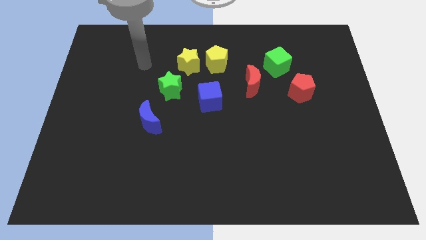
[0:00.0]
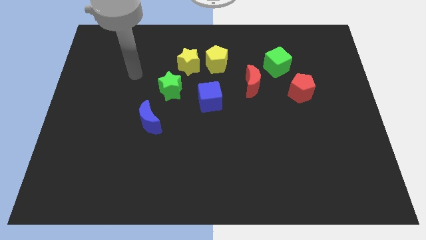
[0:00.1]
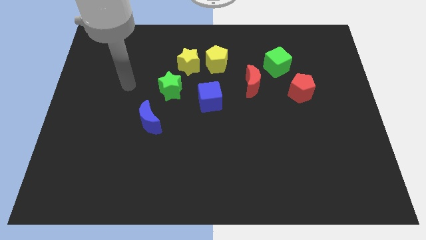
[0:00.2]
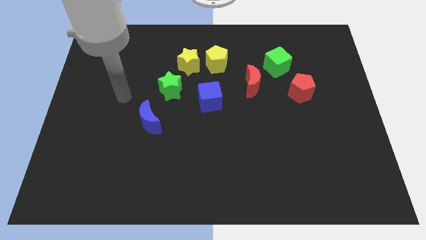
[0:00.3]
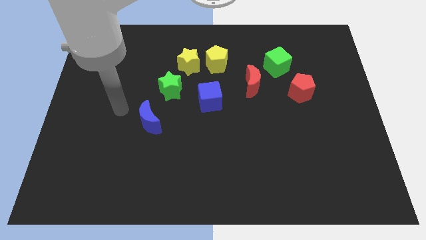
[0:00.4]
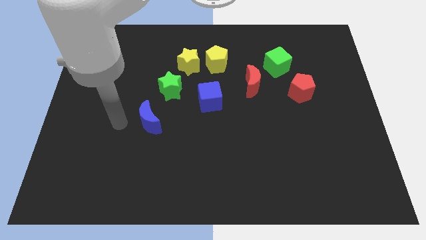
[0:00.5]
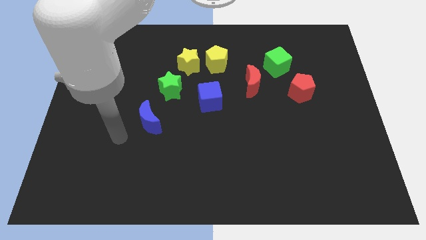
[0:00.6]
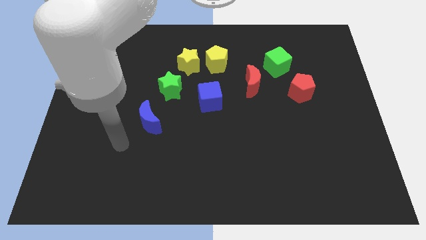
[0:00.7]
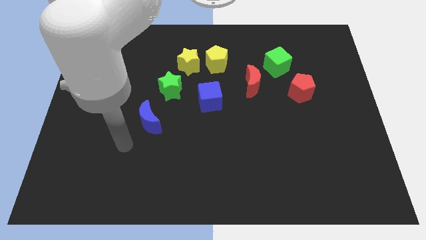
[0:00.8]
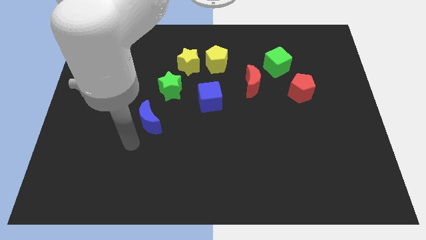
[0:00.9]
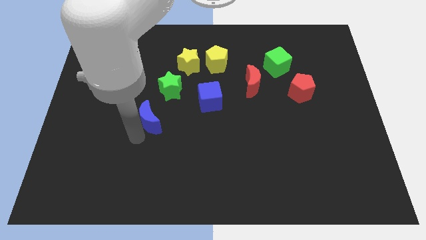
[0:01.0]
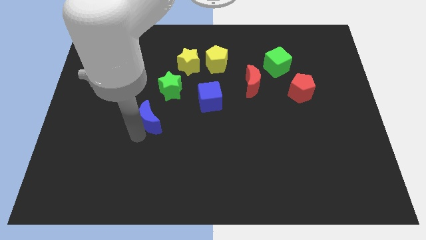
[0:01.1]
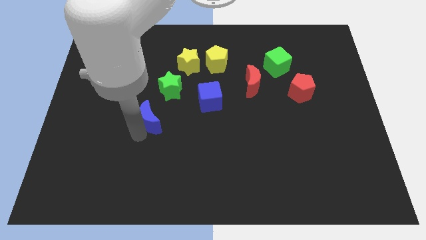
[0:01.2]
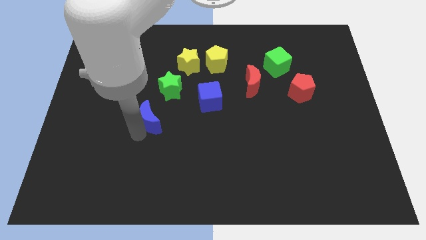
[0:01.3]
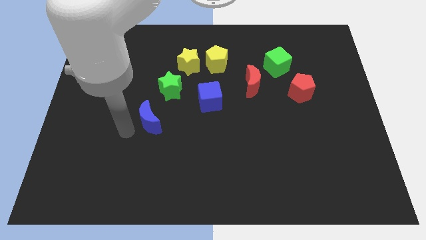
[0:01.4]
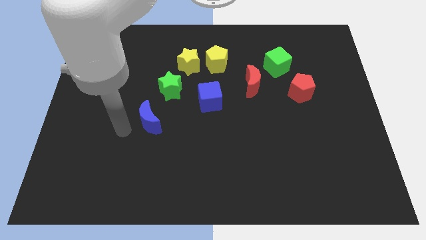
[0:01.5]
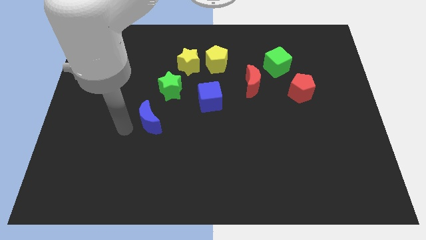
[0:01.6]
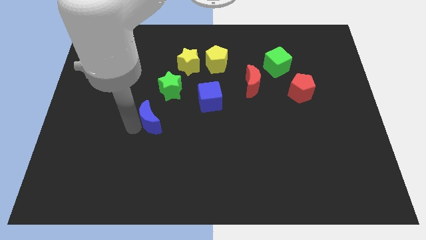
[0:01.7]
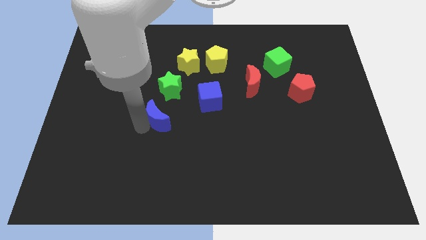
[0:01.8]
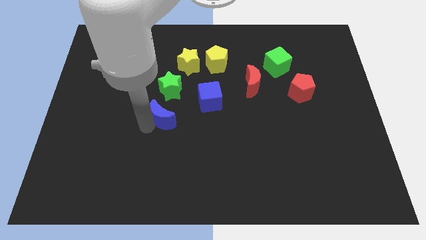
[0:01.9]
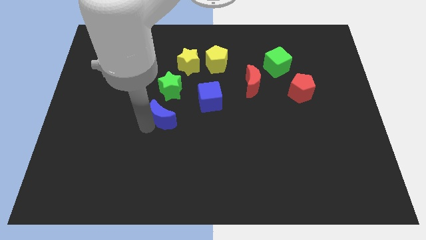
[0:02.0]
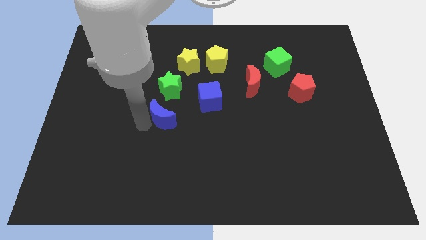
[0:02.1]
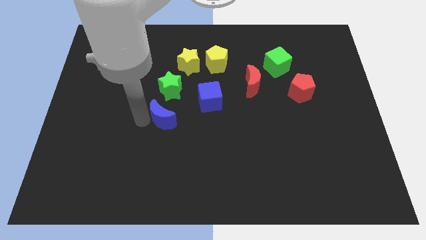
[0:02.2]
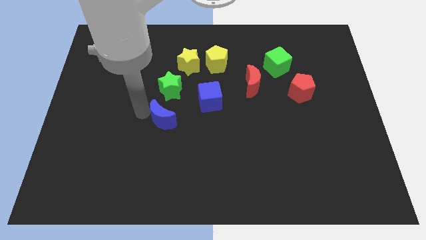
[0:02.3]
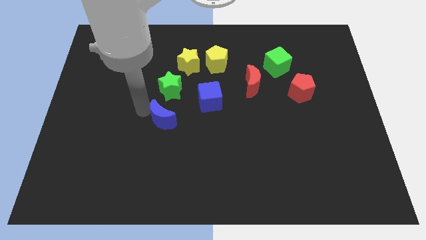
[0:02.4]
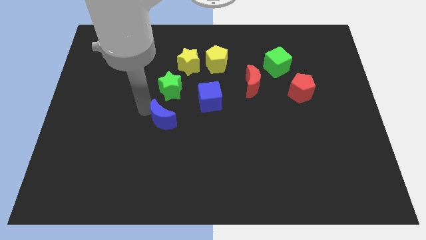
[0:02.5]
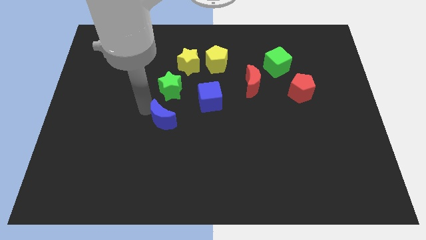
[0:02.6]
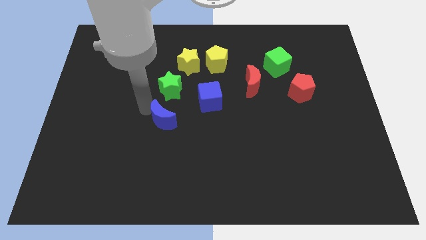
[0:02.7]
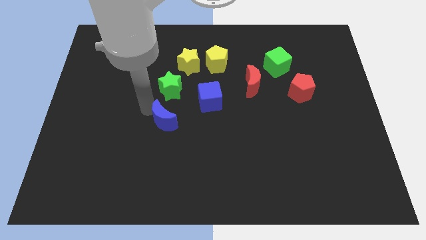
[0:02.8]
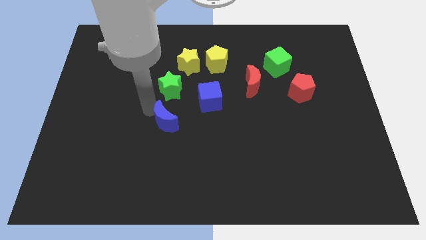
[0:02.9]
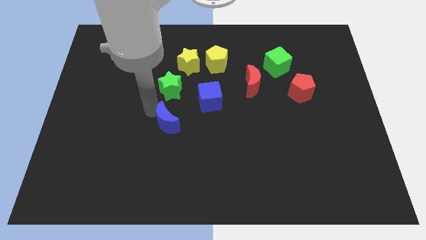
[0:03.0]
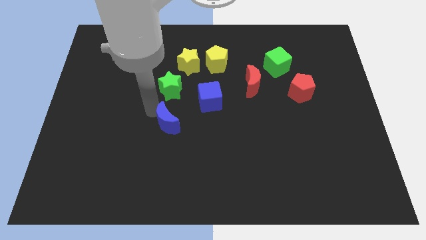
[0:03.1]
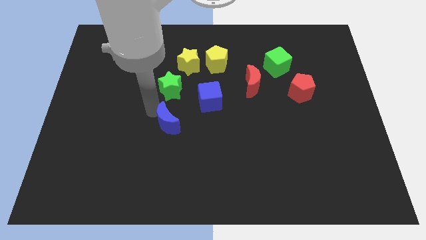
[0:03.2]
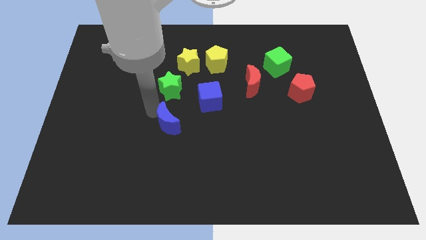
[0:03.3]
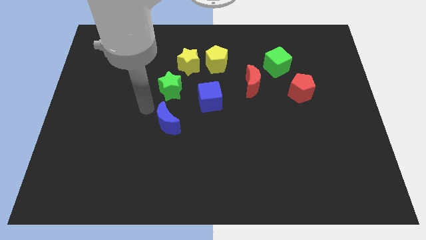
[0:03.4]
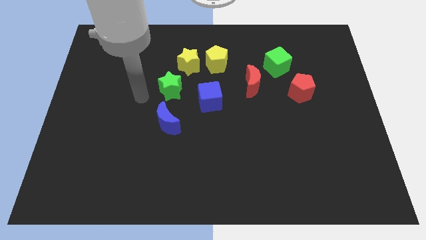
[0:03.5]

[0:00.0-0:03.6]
move the blue crescent to the bottom of the green star

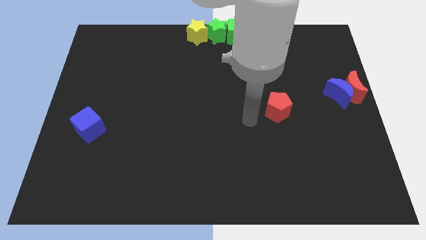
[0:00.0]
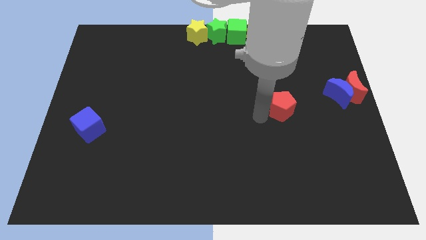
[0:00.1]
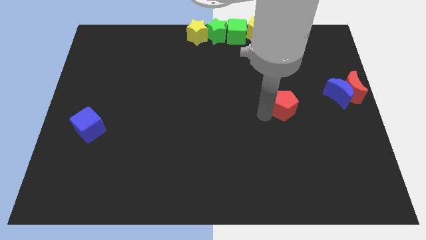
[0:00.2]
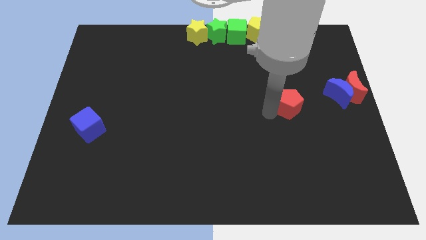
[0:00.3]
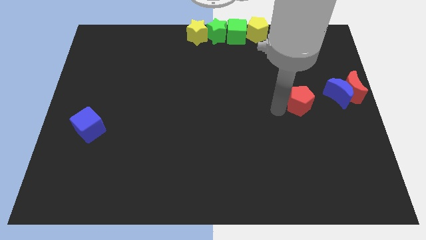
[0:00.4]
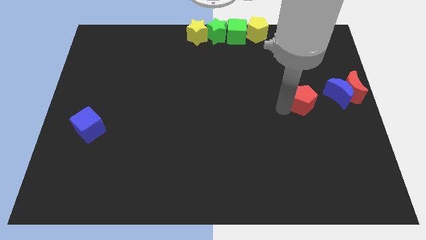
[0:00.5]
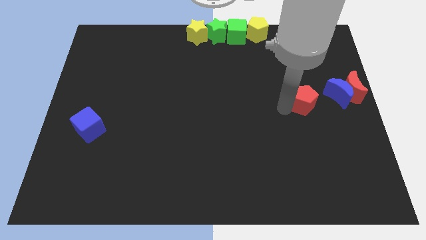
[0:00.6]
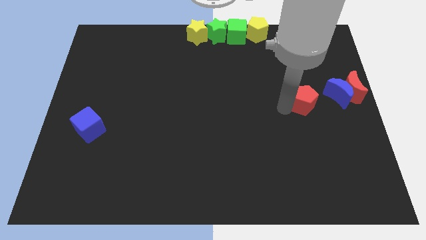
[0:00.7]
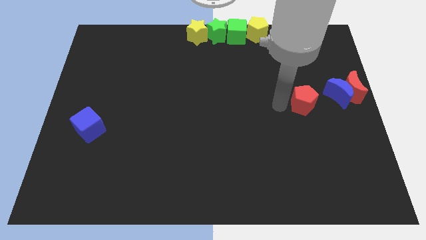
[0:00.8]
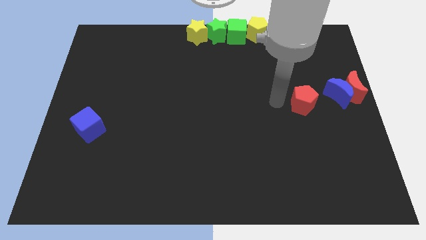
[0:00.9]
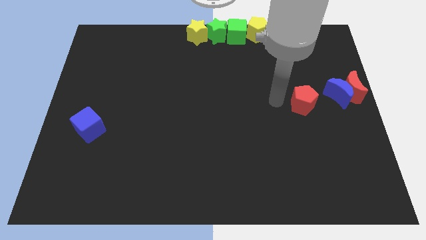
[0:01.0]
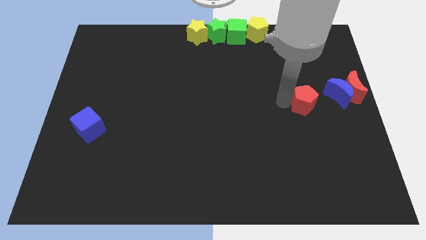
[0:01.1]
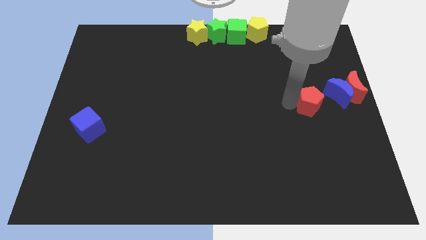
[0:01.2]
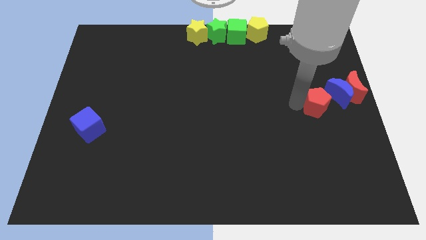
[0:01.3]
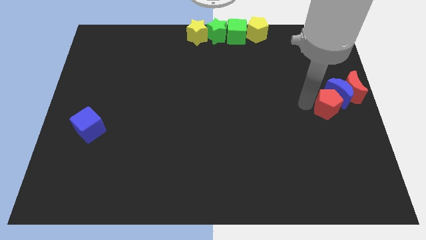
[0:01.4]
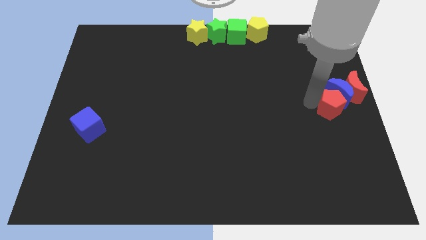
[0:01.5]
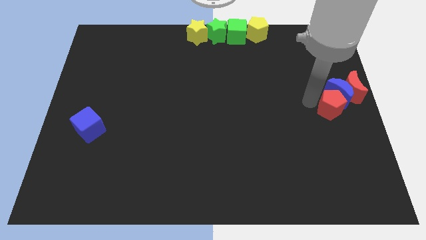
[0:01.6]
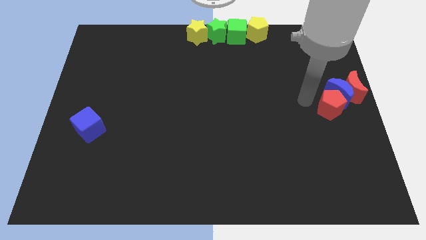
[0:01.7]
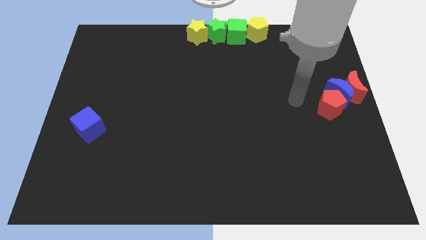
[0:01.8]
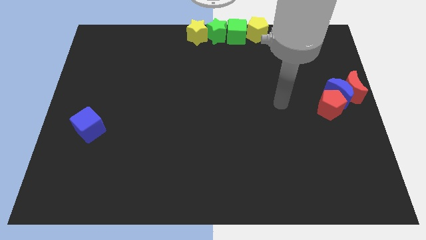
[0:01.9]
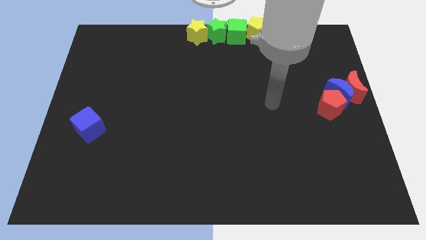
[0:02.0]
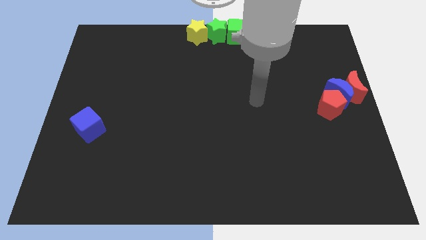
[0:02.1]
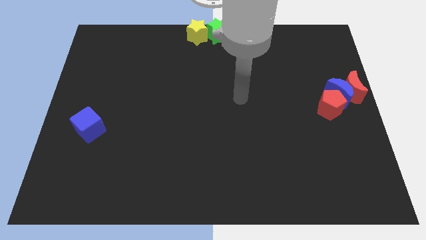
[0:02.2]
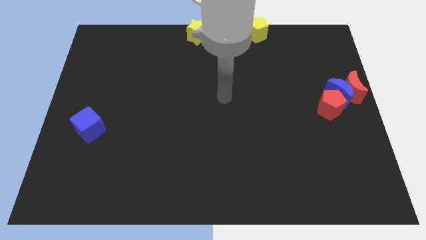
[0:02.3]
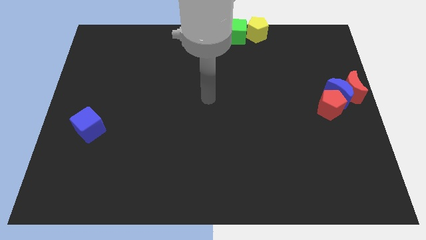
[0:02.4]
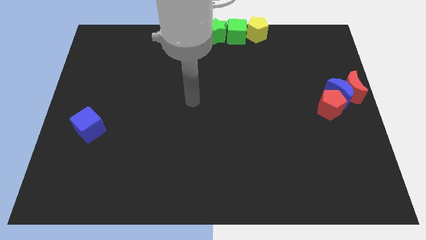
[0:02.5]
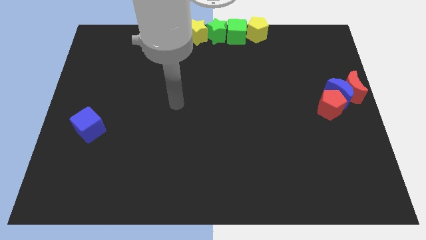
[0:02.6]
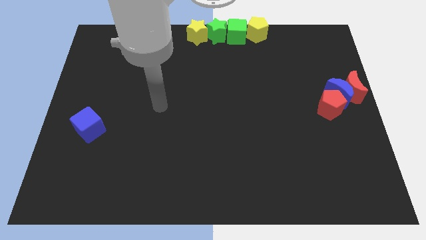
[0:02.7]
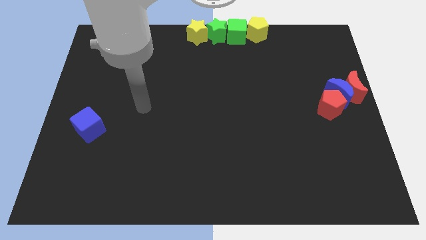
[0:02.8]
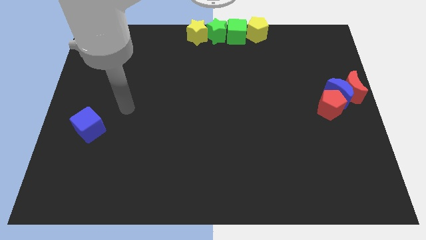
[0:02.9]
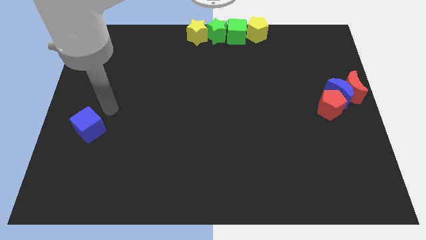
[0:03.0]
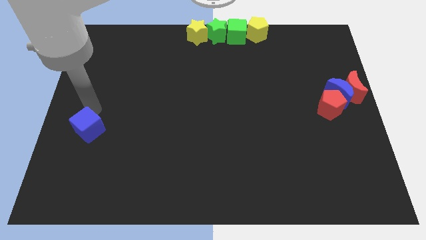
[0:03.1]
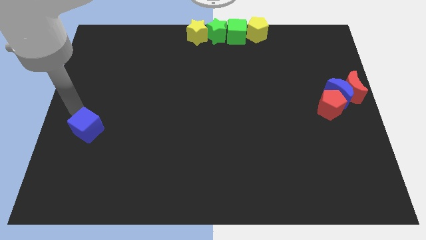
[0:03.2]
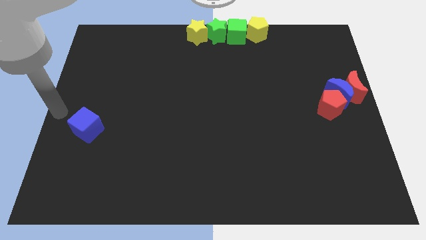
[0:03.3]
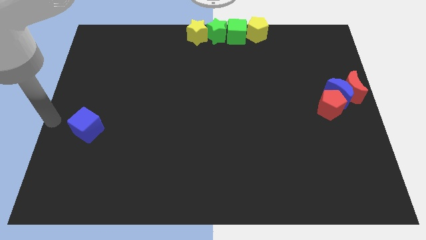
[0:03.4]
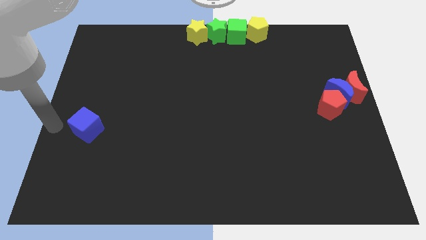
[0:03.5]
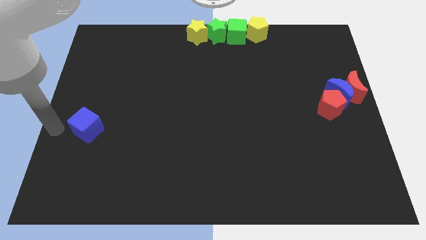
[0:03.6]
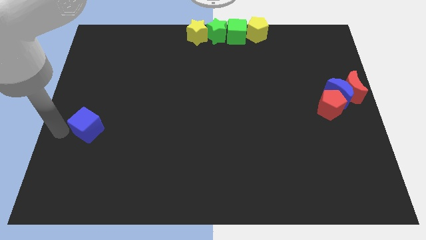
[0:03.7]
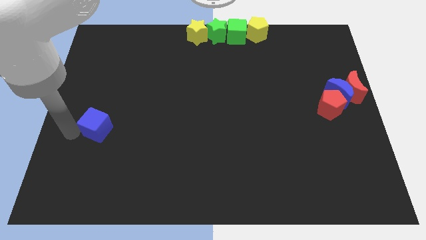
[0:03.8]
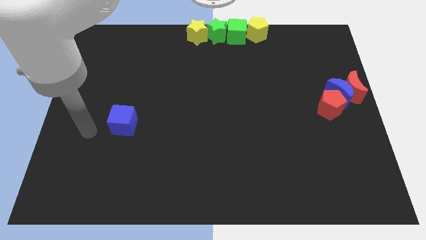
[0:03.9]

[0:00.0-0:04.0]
move your arm towards the blue cube

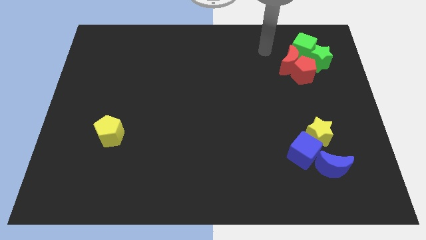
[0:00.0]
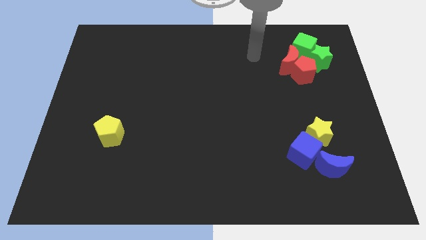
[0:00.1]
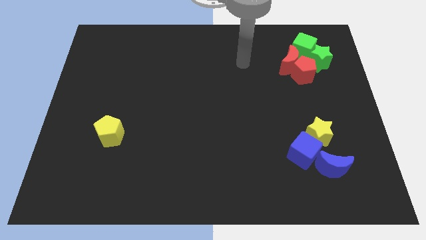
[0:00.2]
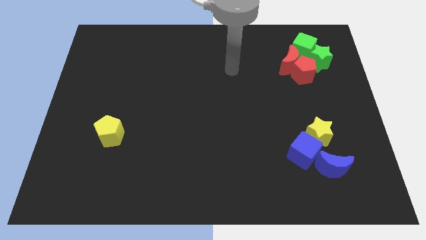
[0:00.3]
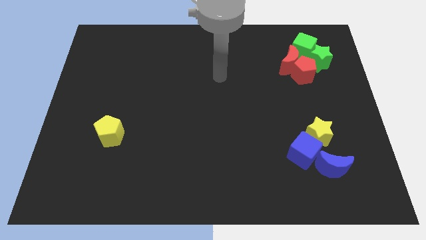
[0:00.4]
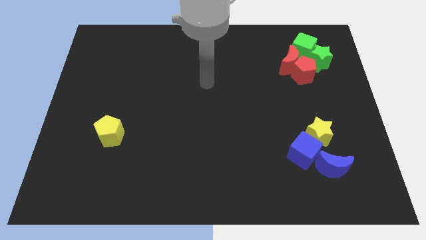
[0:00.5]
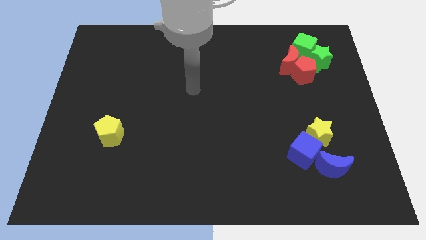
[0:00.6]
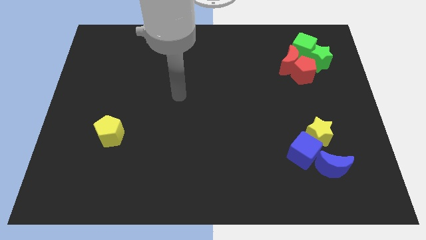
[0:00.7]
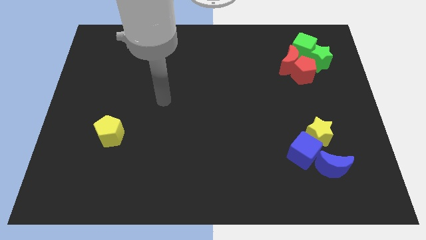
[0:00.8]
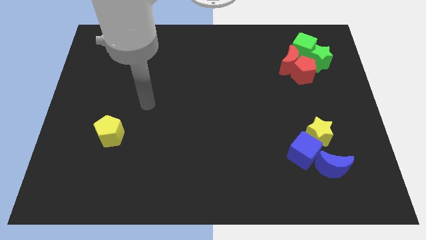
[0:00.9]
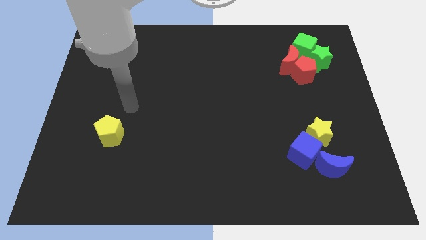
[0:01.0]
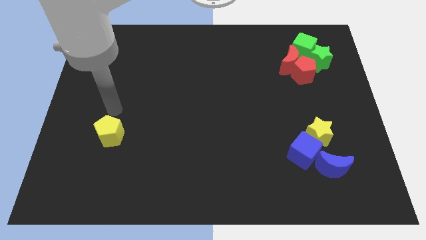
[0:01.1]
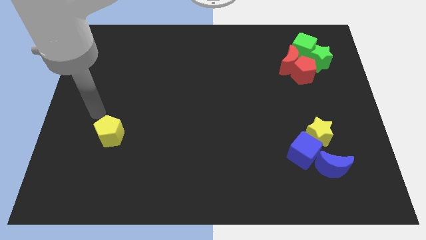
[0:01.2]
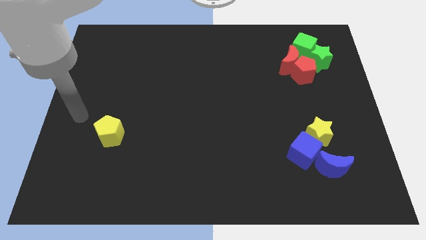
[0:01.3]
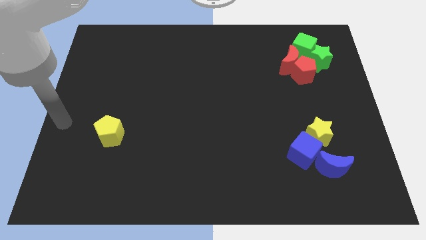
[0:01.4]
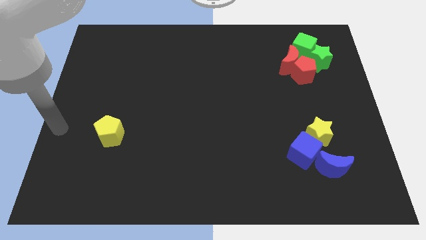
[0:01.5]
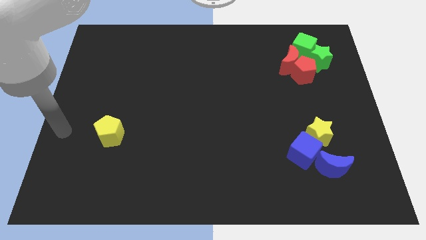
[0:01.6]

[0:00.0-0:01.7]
move your hand to the left center of the board
